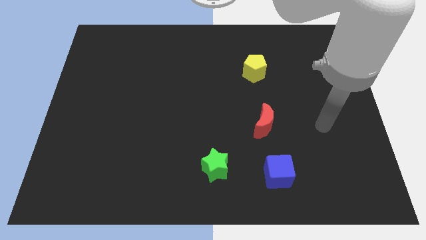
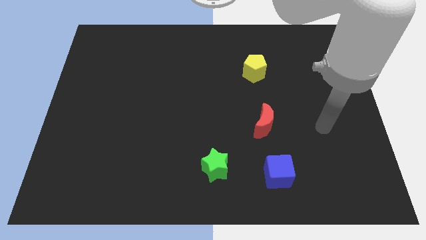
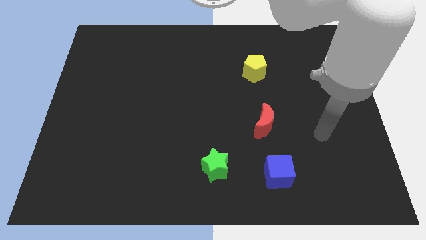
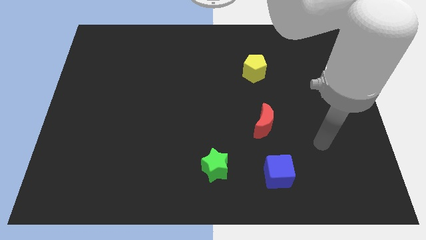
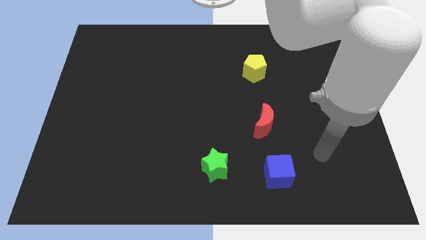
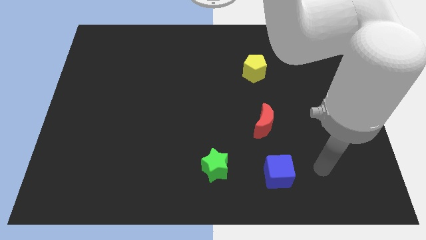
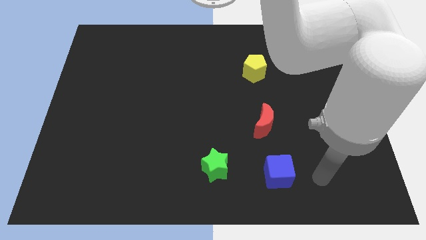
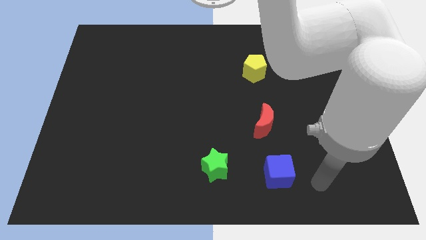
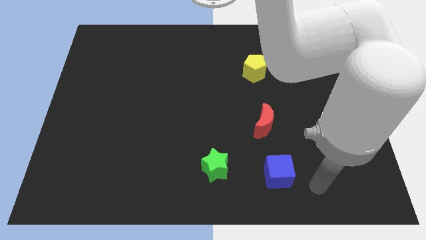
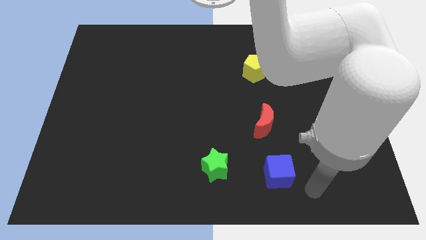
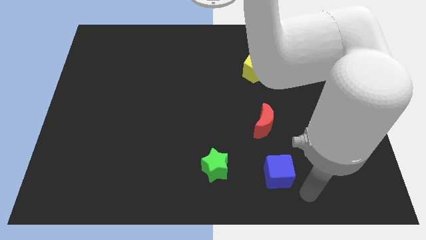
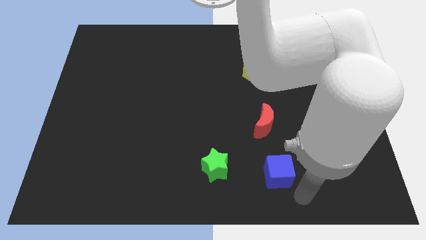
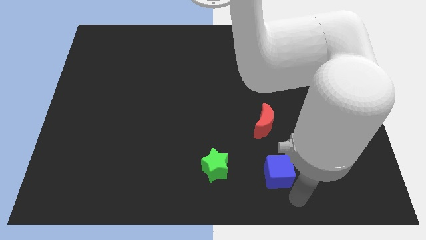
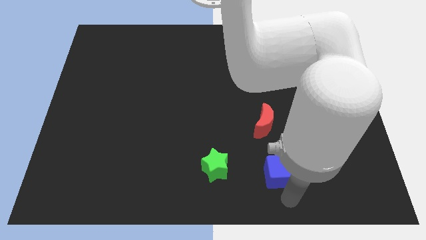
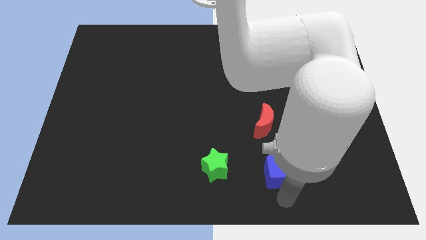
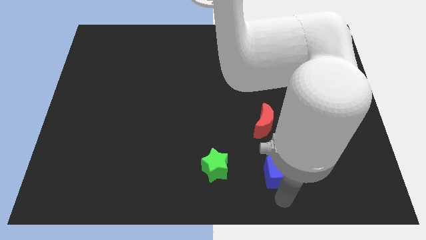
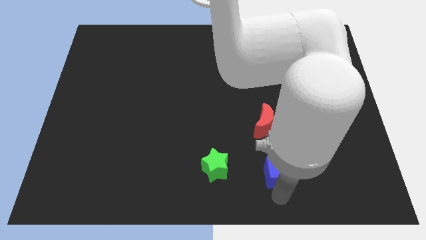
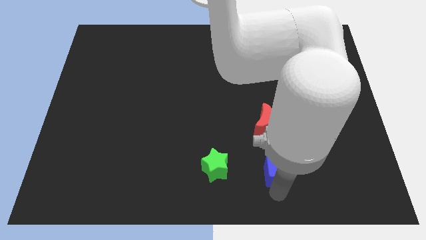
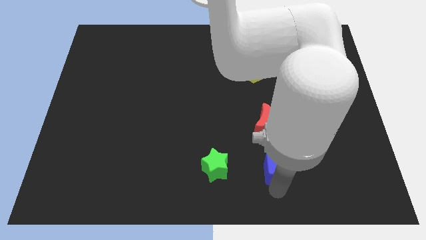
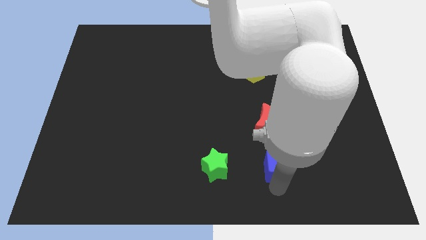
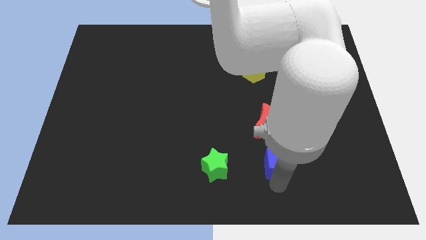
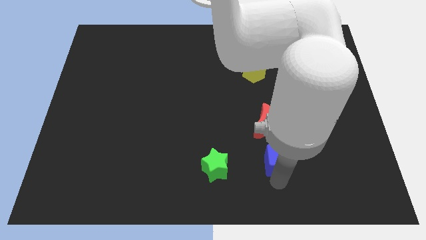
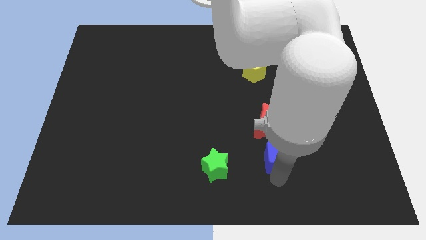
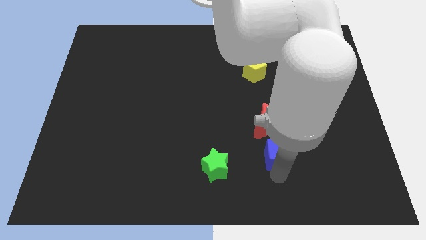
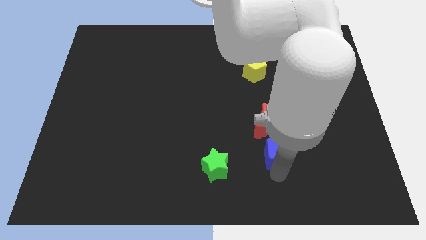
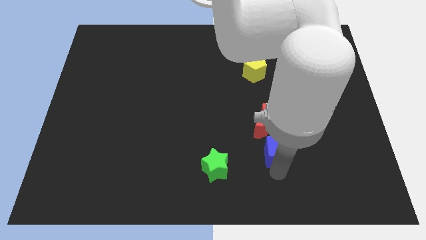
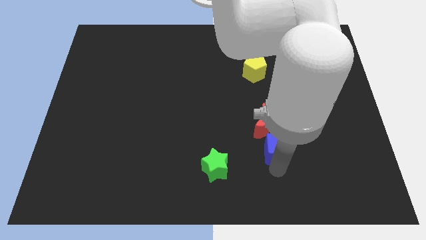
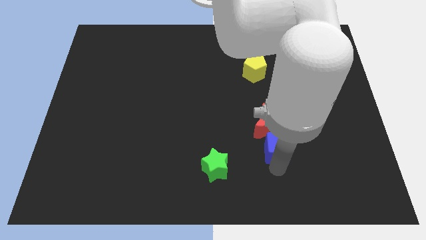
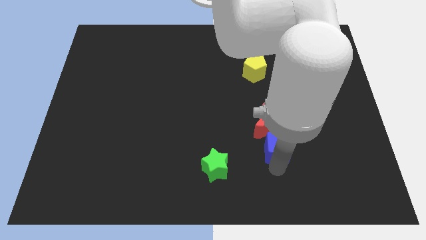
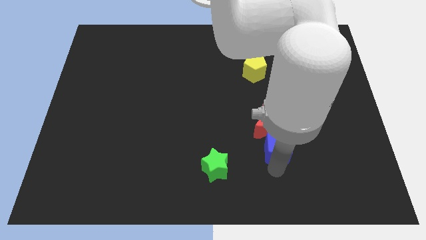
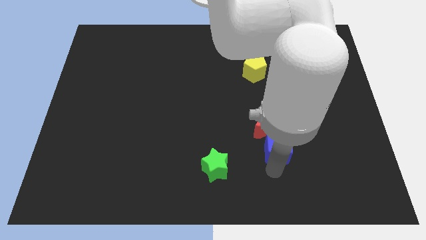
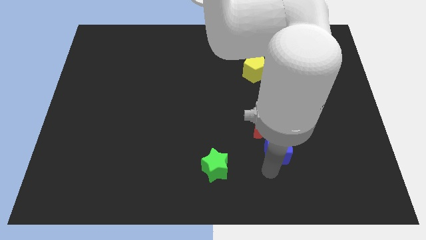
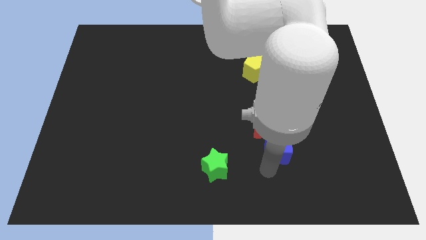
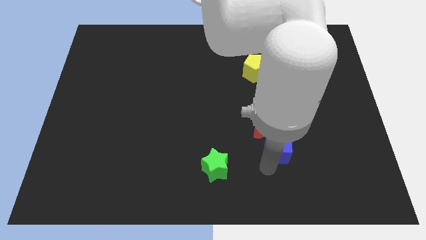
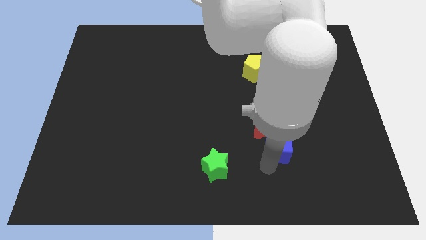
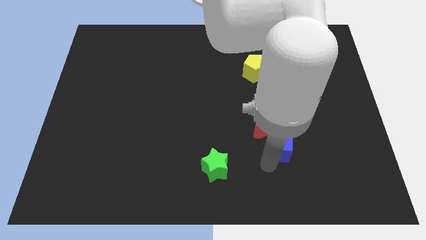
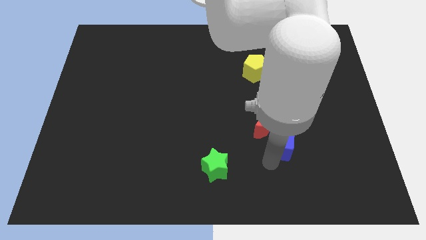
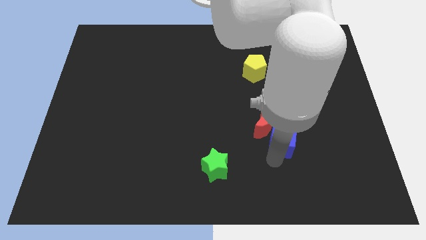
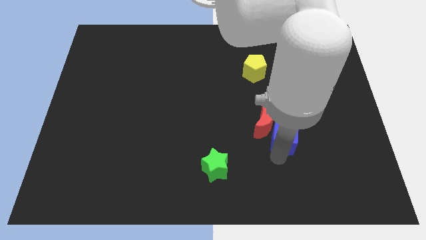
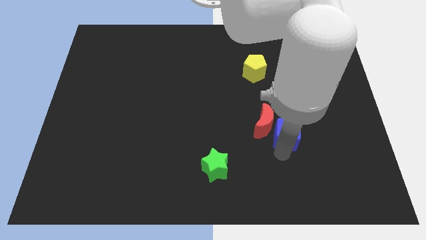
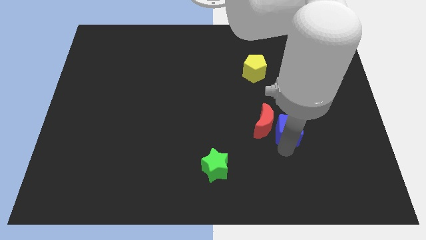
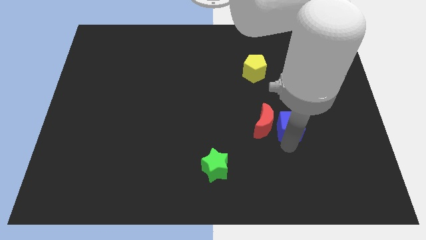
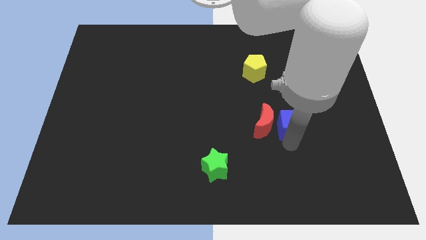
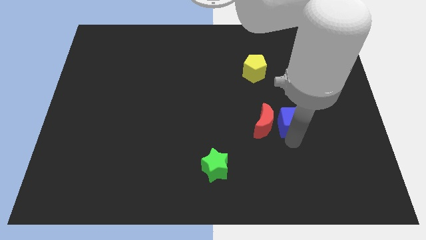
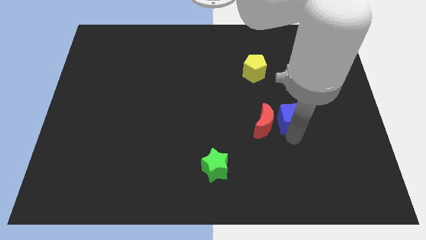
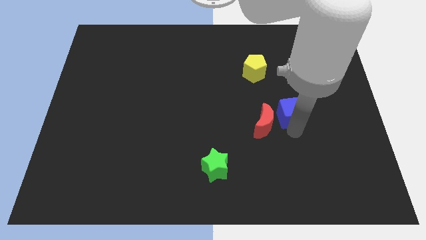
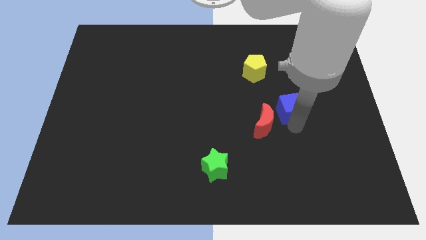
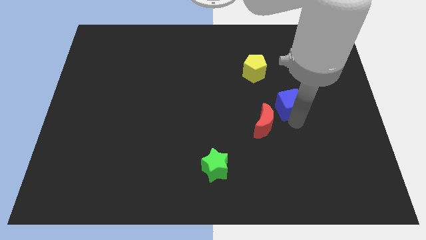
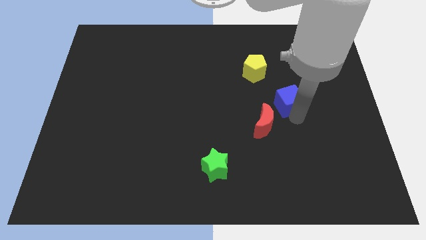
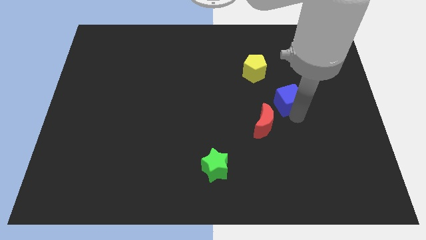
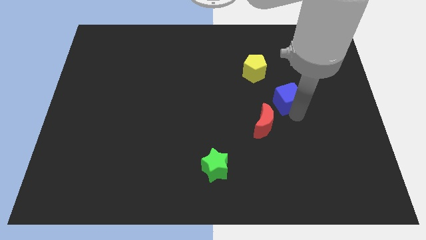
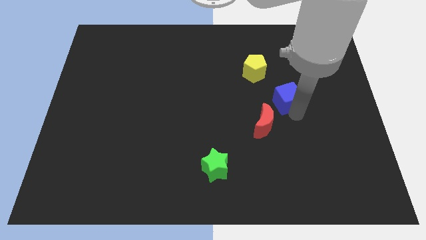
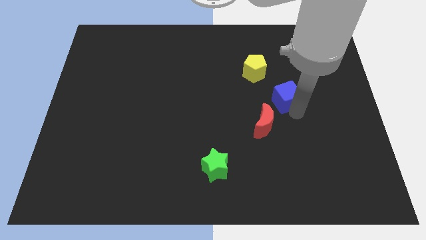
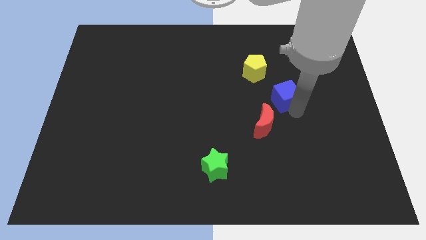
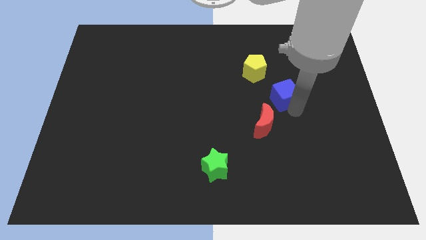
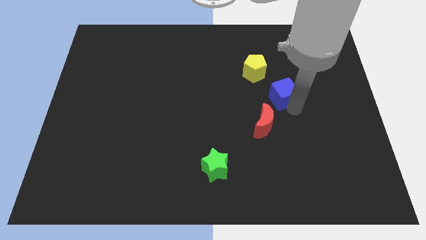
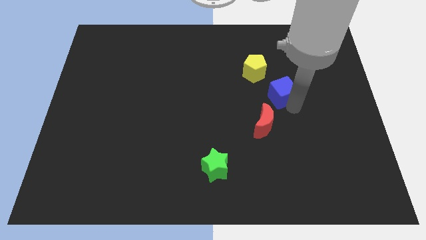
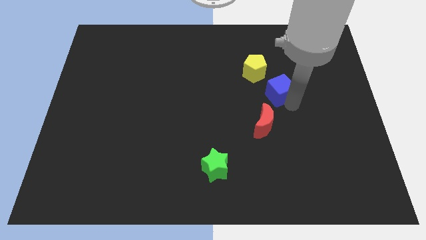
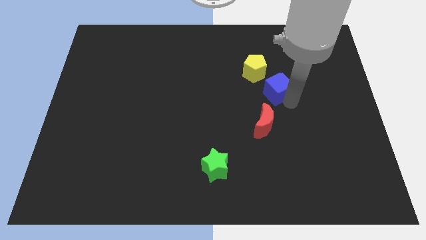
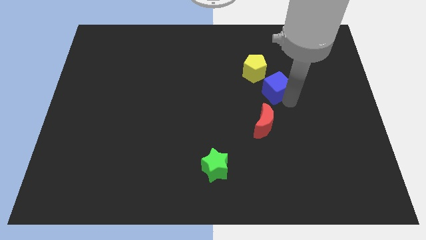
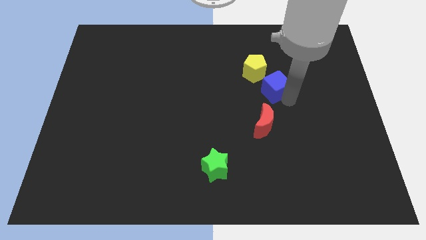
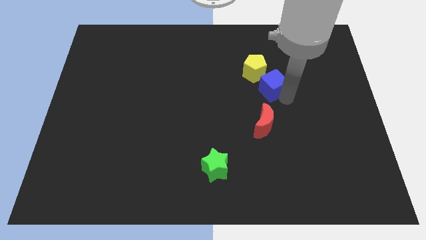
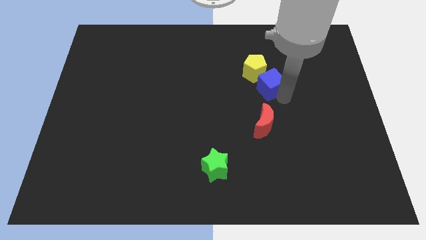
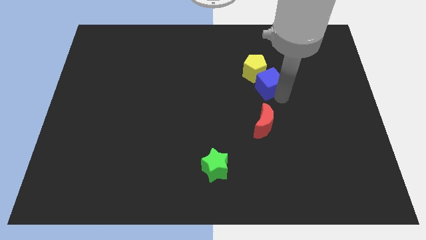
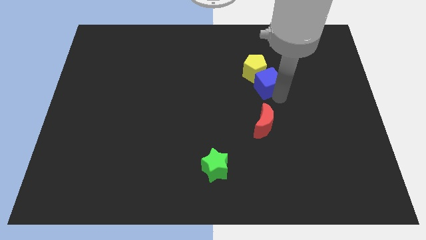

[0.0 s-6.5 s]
slide the cube close to the yellow block

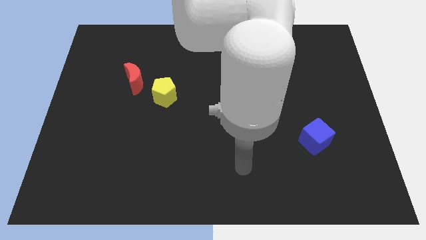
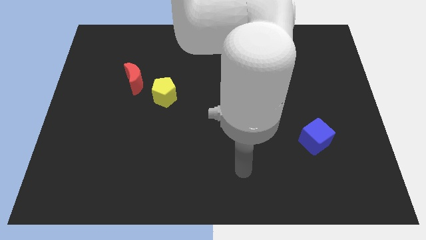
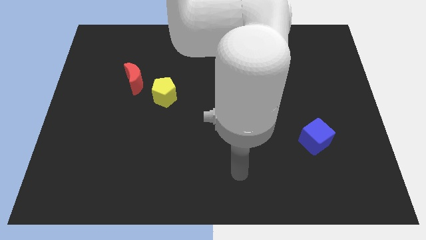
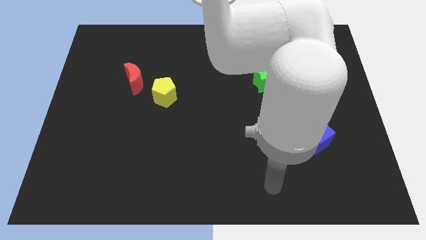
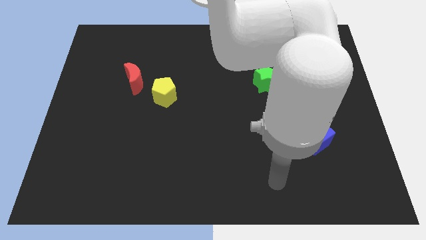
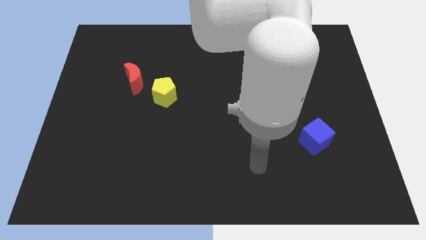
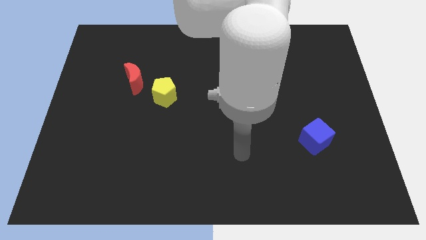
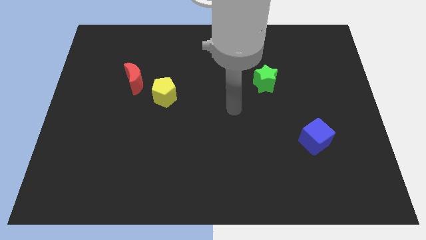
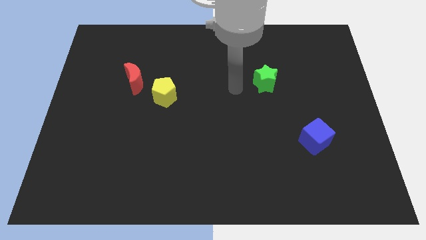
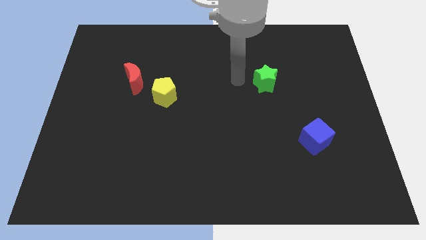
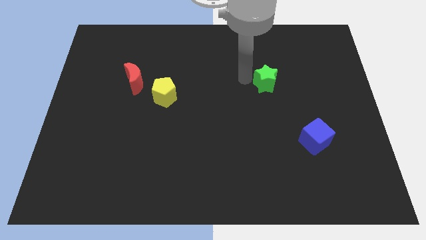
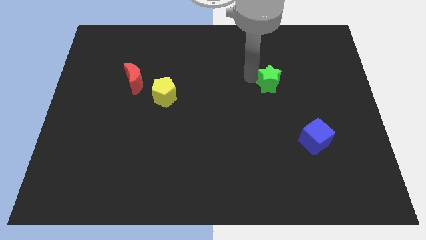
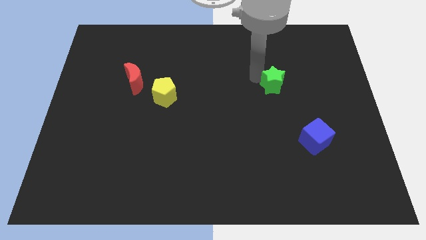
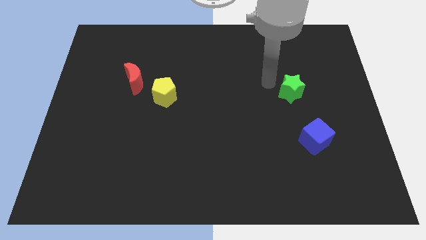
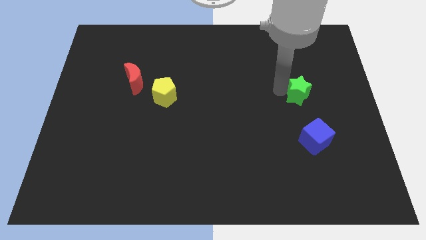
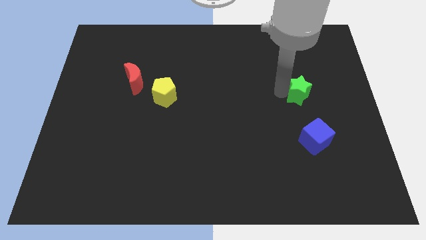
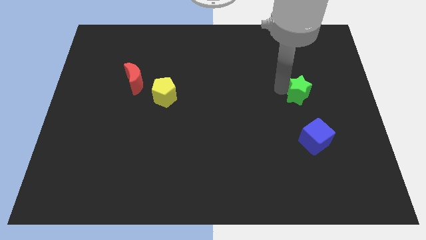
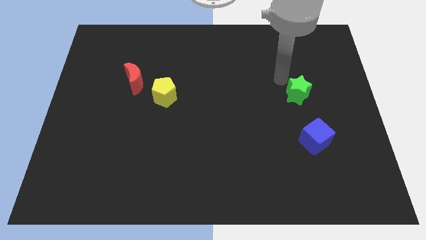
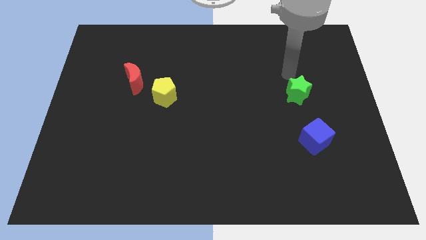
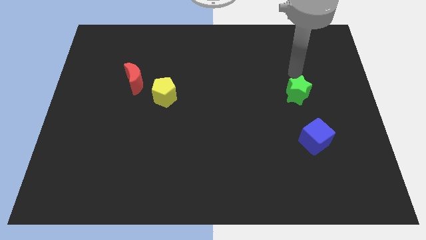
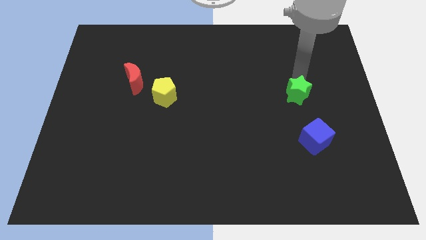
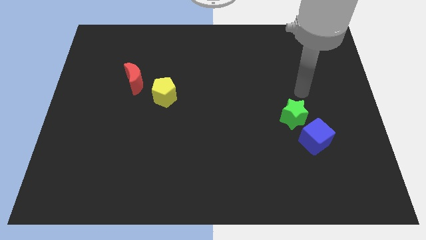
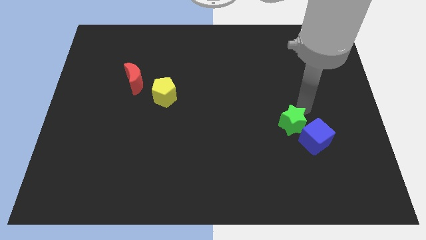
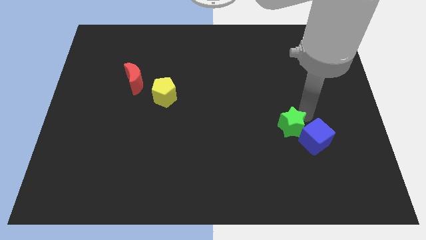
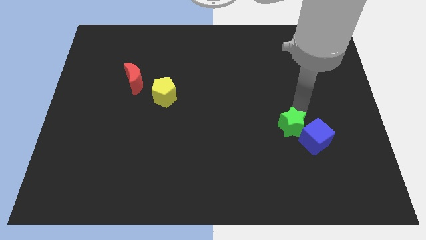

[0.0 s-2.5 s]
put the green star towards the blue block
